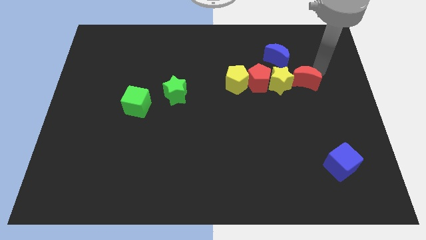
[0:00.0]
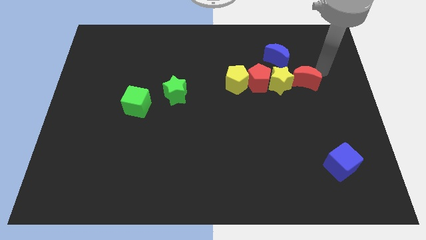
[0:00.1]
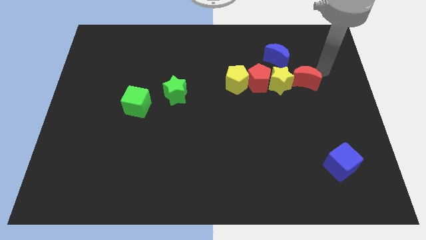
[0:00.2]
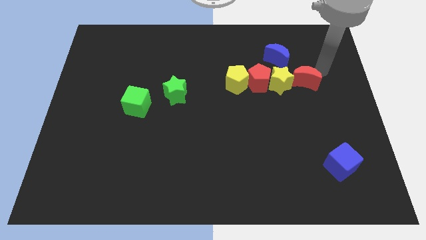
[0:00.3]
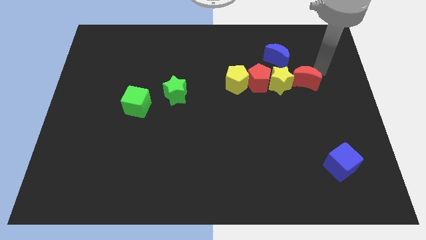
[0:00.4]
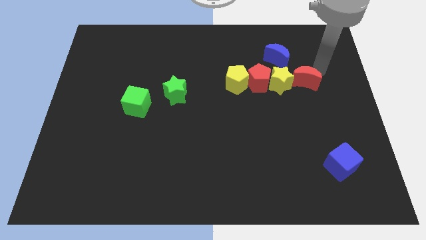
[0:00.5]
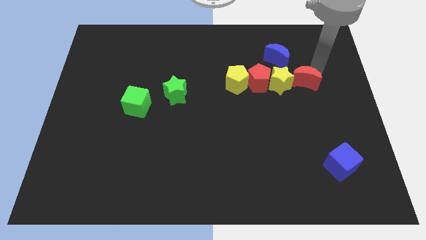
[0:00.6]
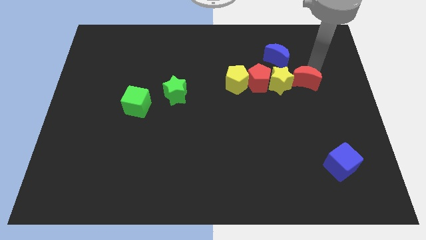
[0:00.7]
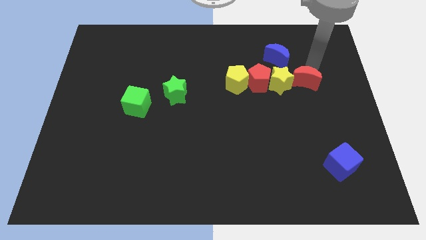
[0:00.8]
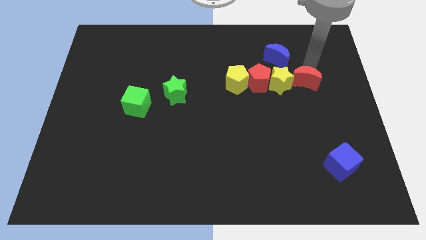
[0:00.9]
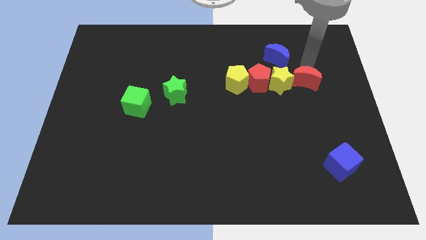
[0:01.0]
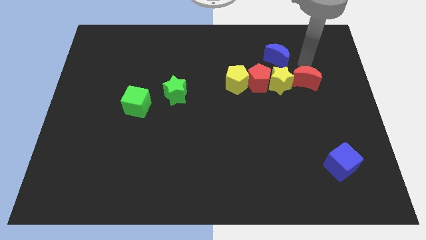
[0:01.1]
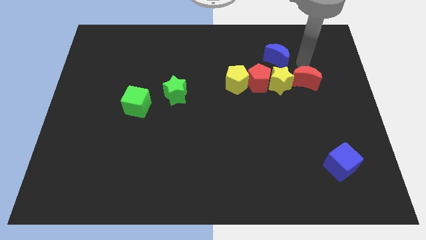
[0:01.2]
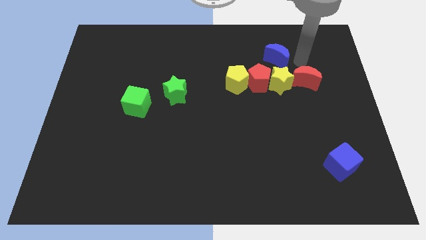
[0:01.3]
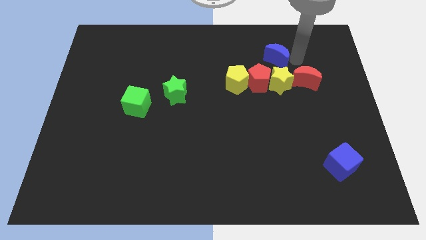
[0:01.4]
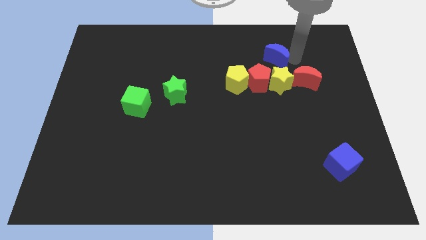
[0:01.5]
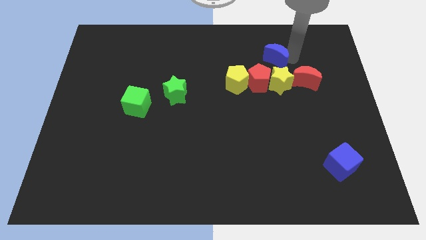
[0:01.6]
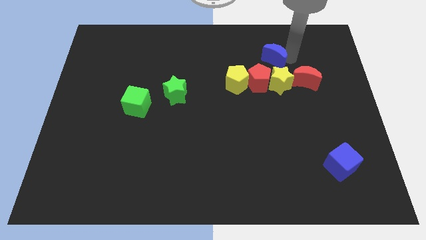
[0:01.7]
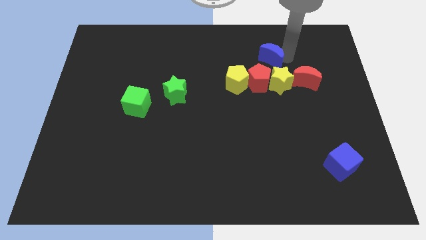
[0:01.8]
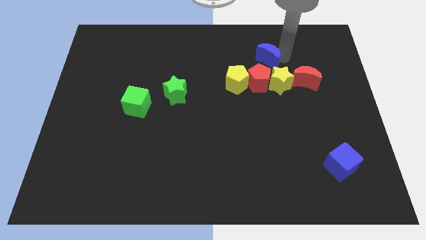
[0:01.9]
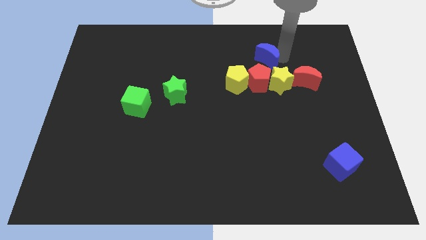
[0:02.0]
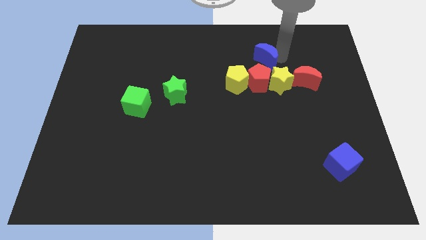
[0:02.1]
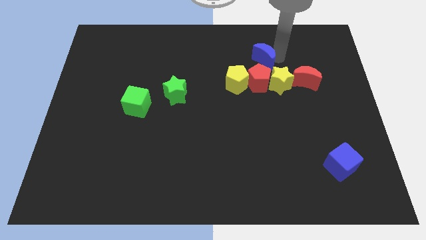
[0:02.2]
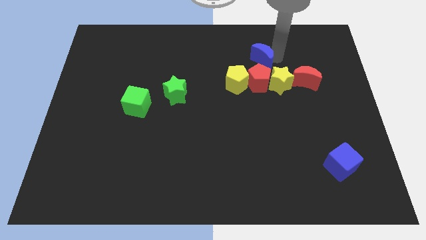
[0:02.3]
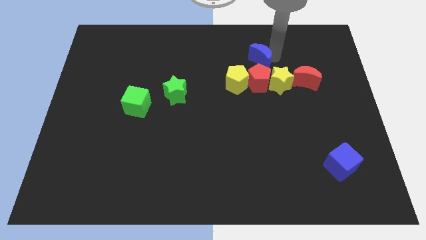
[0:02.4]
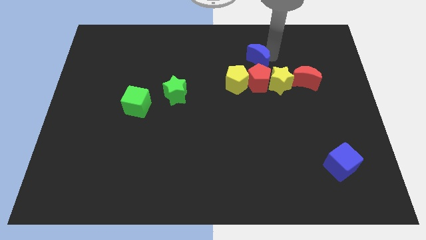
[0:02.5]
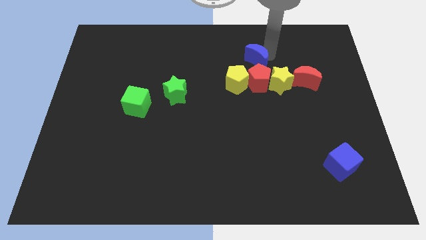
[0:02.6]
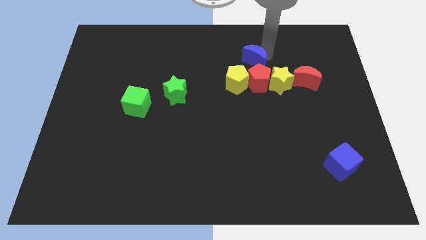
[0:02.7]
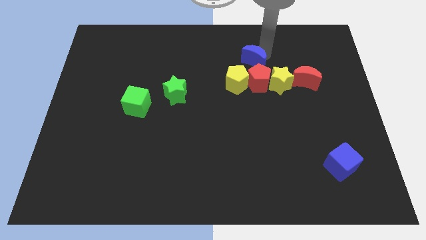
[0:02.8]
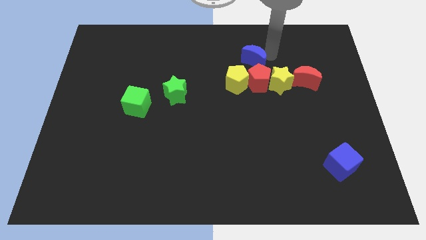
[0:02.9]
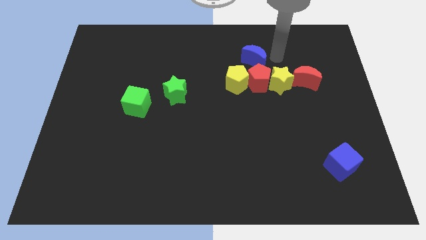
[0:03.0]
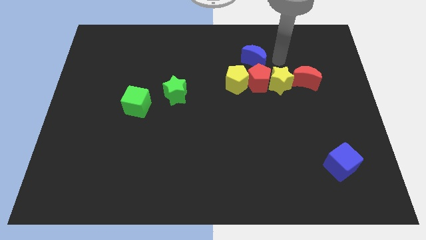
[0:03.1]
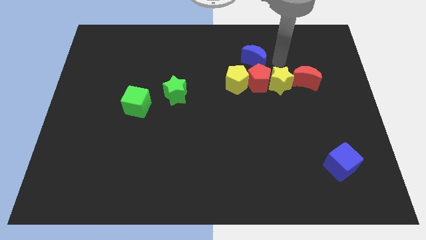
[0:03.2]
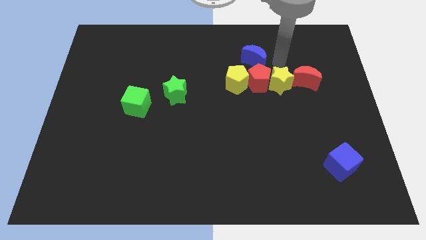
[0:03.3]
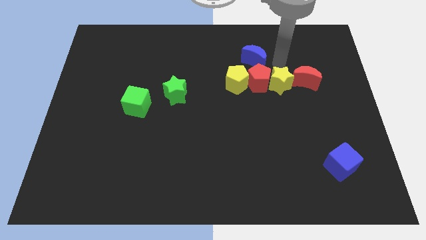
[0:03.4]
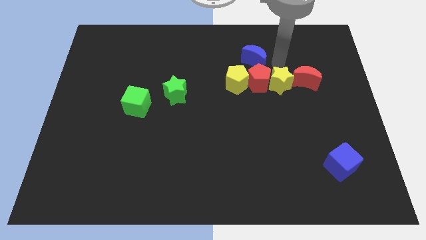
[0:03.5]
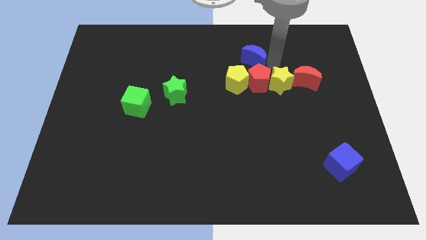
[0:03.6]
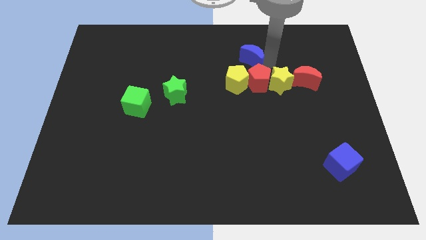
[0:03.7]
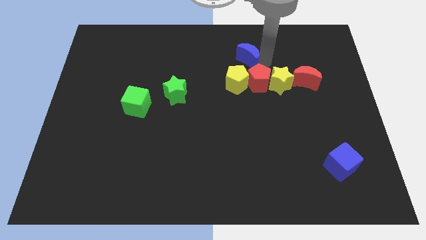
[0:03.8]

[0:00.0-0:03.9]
push the blue crescent towards the top of red pentagon

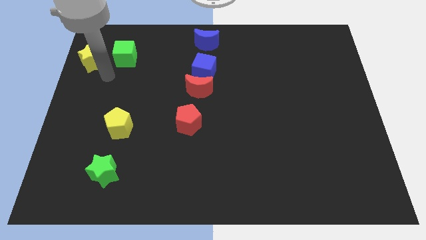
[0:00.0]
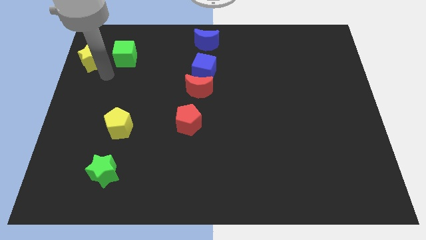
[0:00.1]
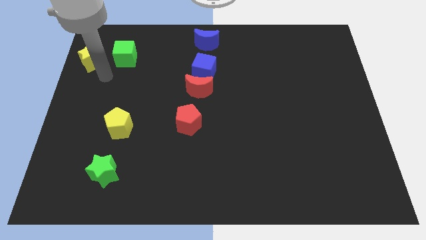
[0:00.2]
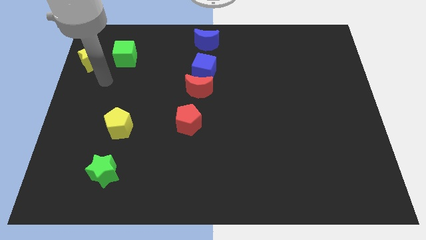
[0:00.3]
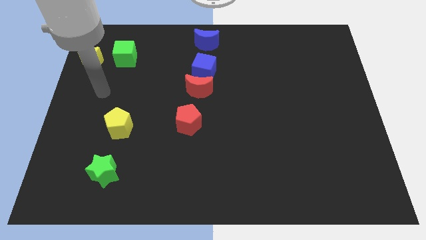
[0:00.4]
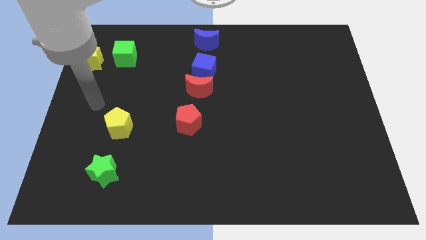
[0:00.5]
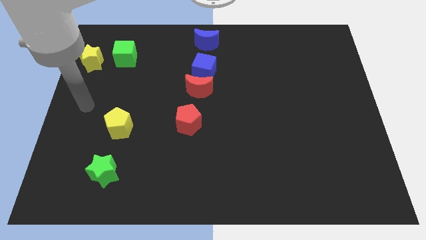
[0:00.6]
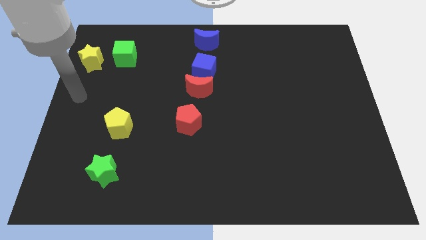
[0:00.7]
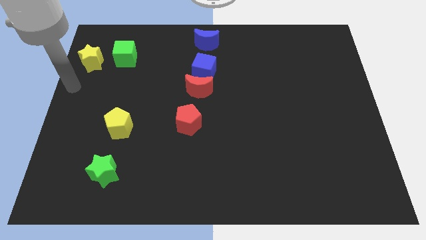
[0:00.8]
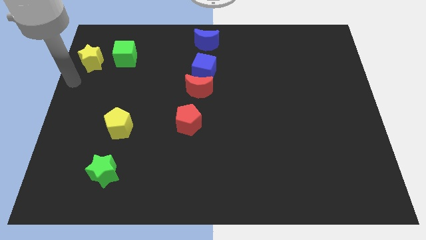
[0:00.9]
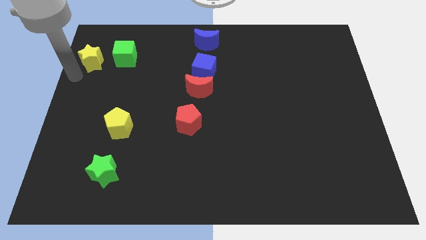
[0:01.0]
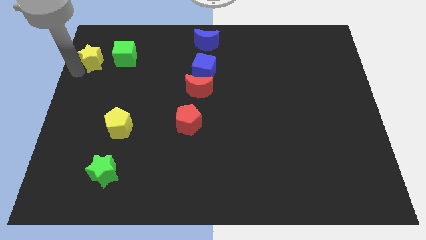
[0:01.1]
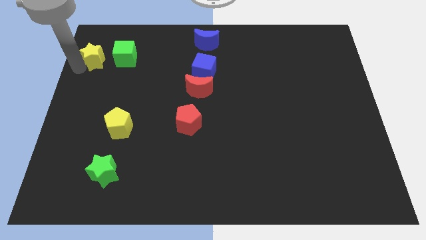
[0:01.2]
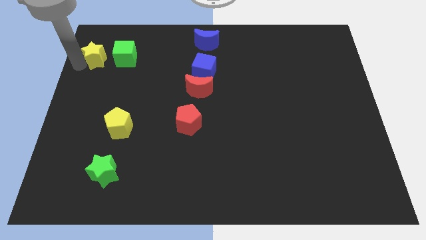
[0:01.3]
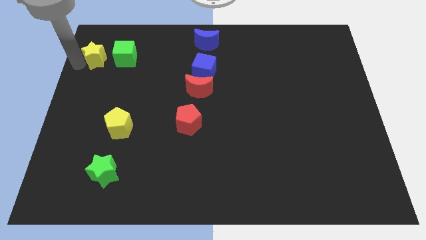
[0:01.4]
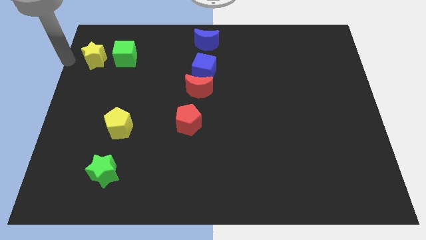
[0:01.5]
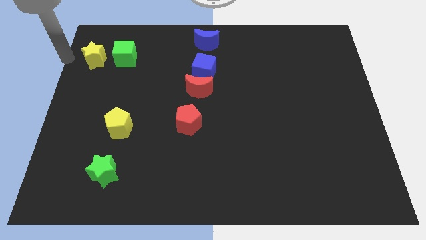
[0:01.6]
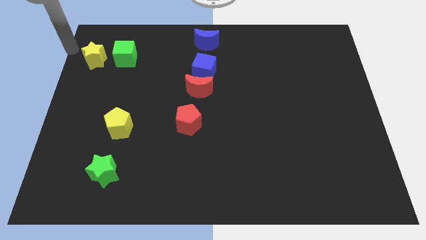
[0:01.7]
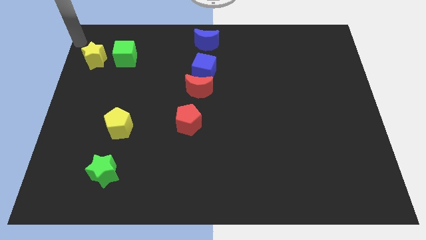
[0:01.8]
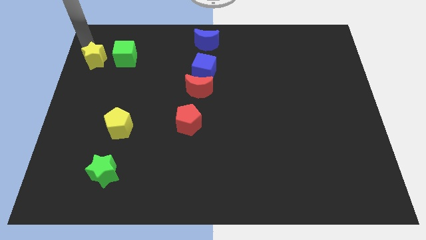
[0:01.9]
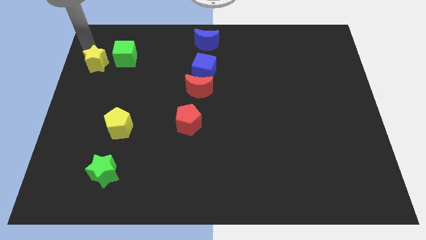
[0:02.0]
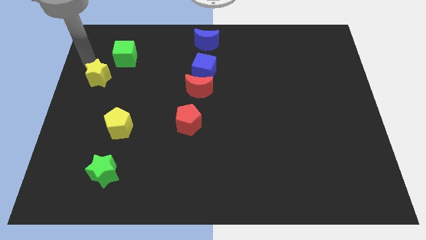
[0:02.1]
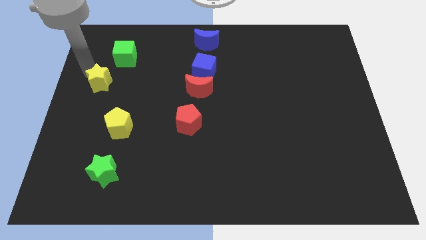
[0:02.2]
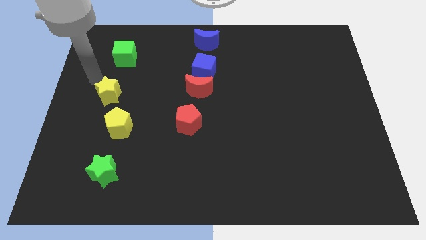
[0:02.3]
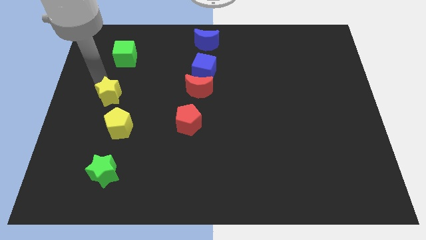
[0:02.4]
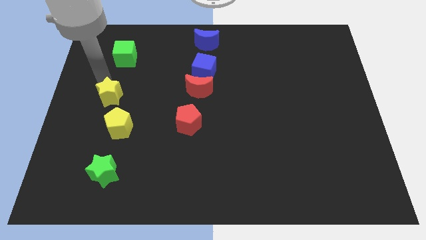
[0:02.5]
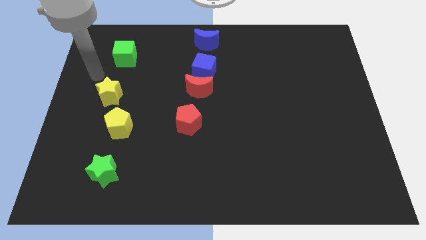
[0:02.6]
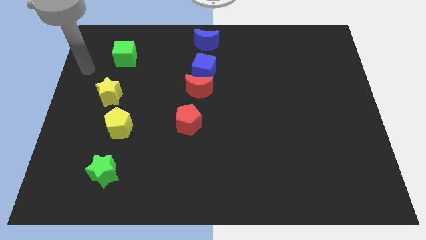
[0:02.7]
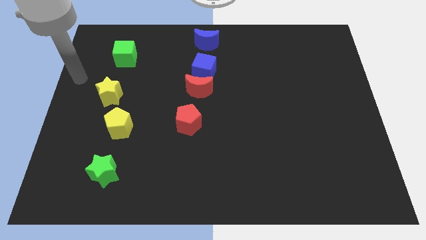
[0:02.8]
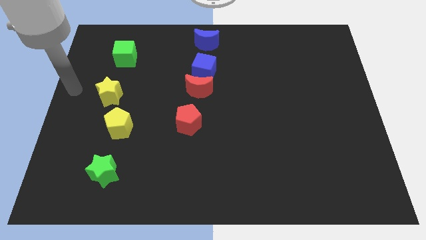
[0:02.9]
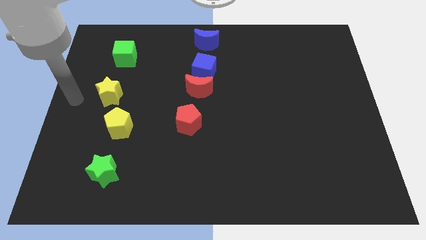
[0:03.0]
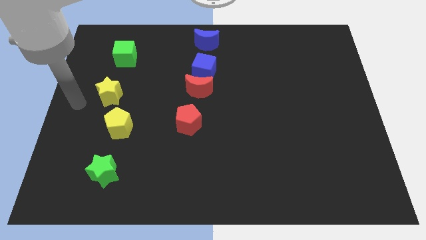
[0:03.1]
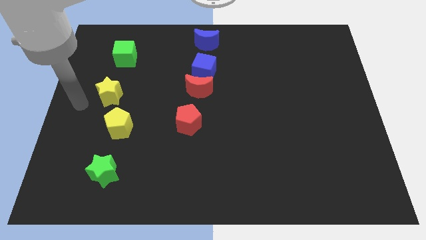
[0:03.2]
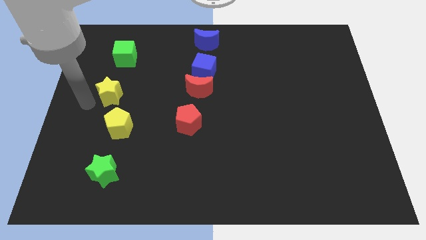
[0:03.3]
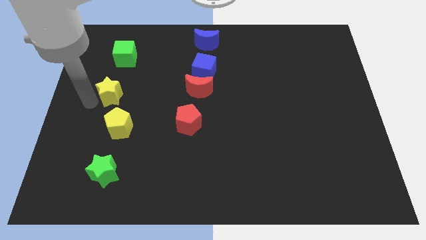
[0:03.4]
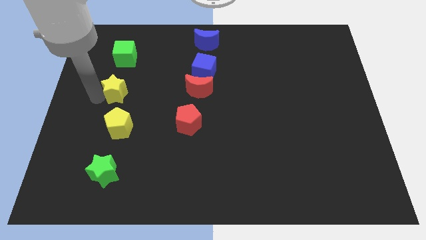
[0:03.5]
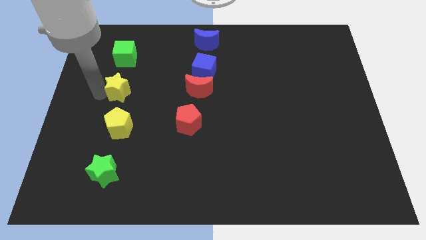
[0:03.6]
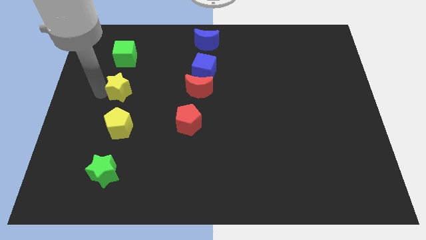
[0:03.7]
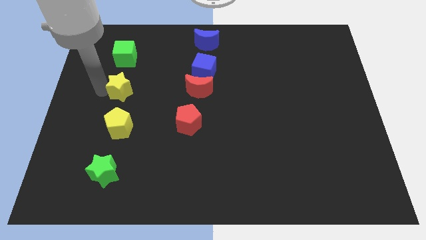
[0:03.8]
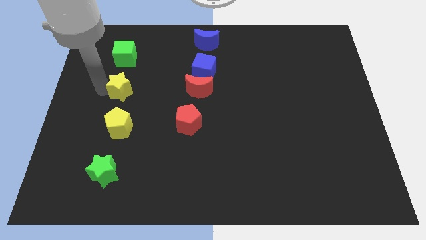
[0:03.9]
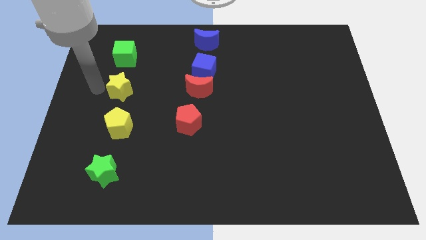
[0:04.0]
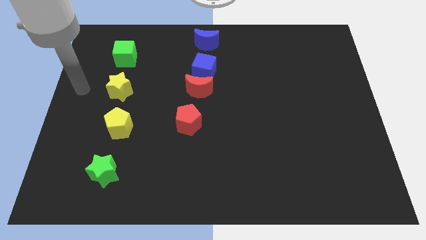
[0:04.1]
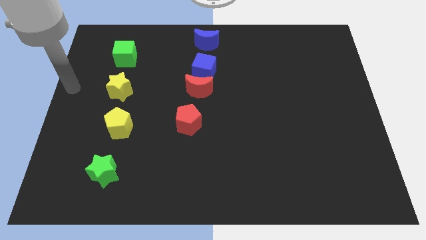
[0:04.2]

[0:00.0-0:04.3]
place the yellow star in between the green cube and yellow pentagon

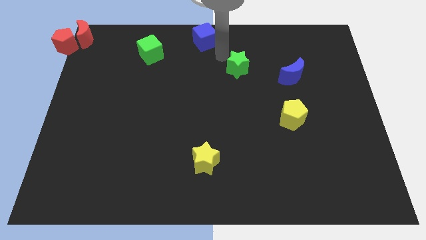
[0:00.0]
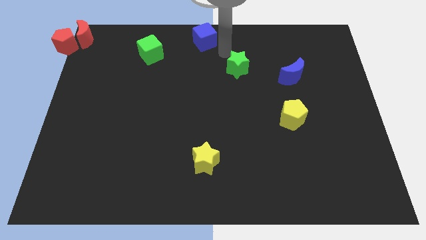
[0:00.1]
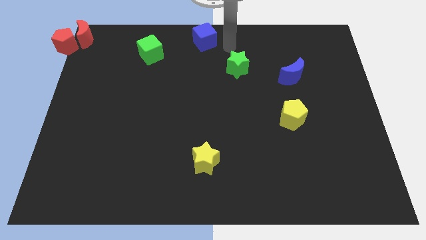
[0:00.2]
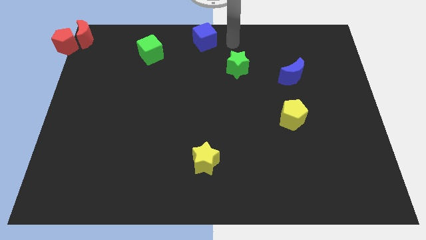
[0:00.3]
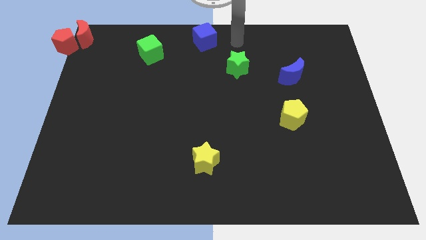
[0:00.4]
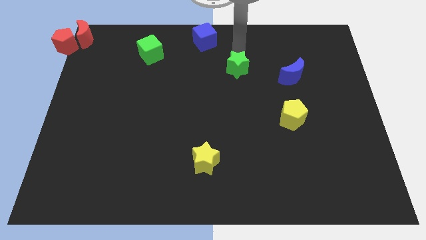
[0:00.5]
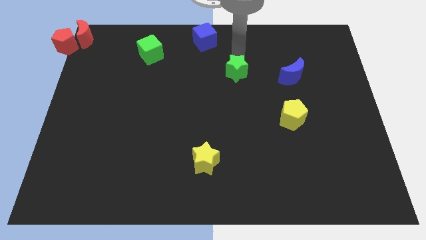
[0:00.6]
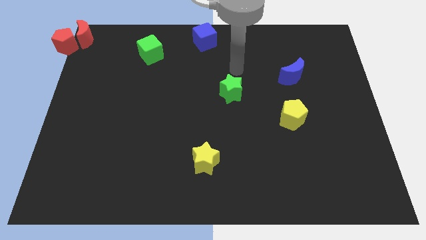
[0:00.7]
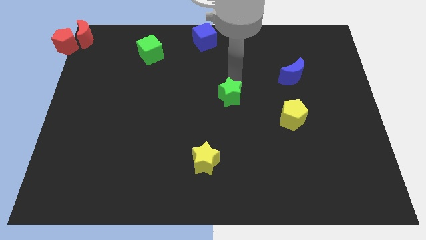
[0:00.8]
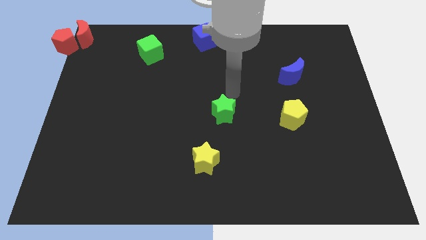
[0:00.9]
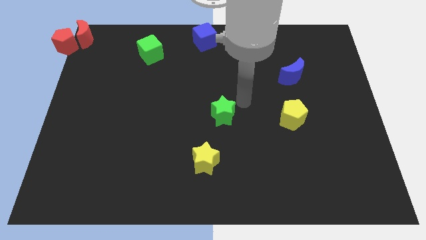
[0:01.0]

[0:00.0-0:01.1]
move green star towards yellow star
